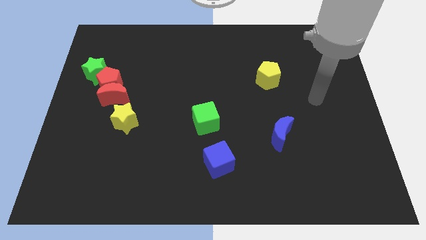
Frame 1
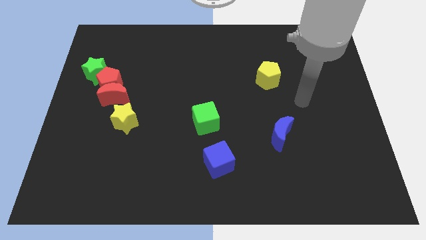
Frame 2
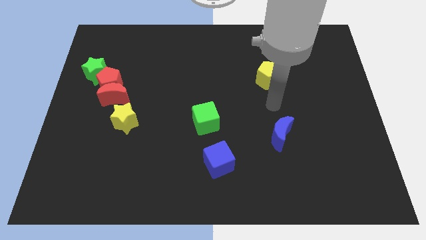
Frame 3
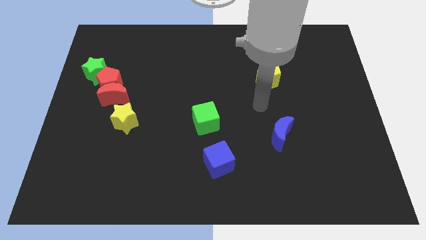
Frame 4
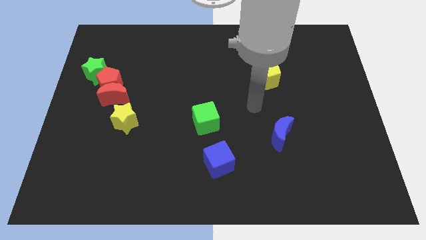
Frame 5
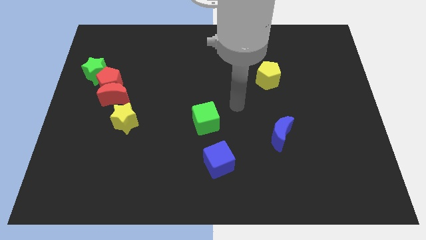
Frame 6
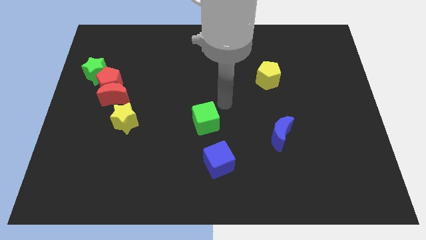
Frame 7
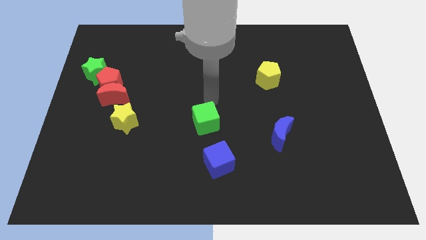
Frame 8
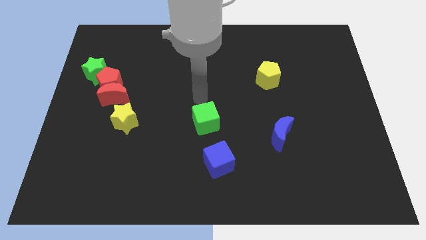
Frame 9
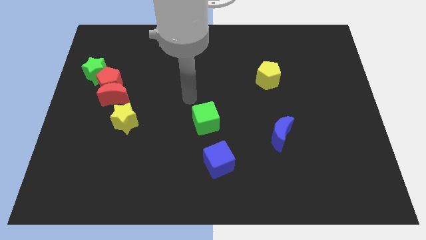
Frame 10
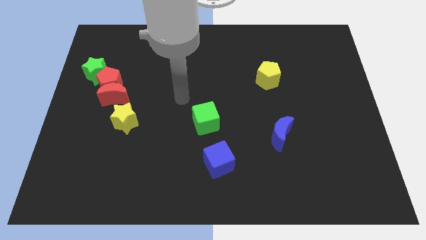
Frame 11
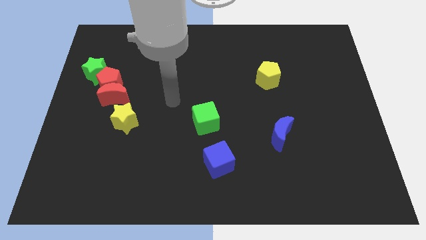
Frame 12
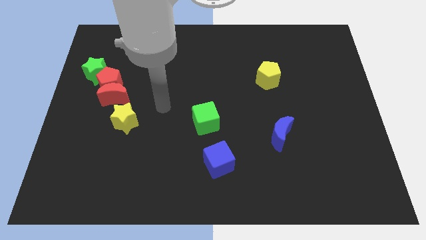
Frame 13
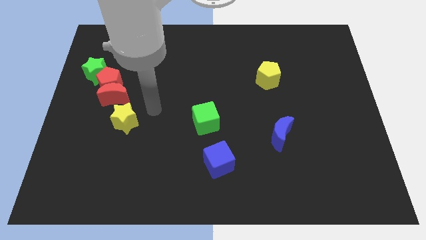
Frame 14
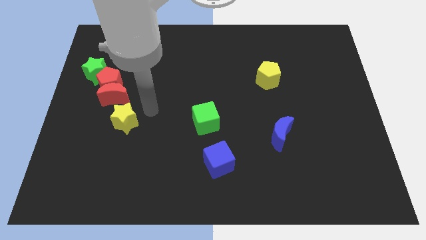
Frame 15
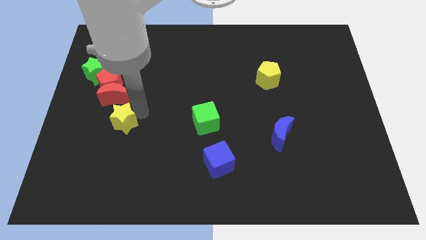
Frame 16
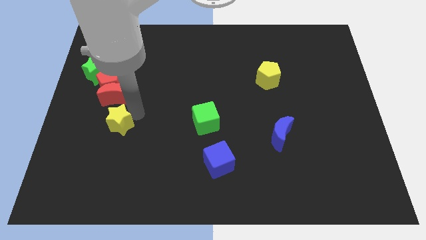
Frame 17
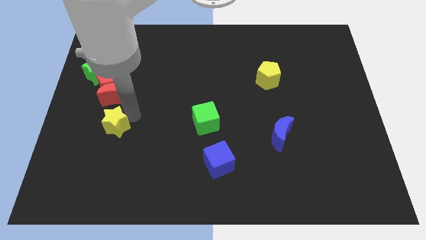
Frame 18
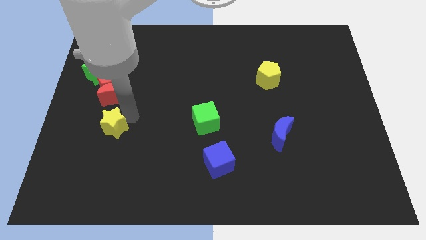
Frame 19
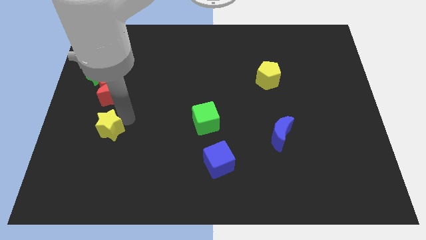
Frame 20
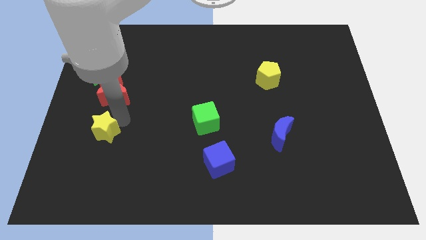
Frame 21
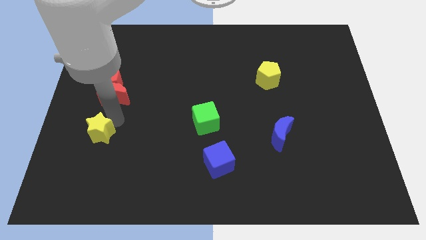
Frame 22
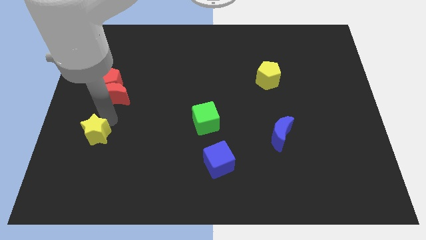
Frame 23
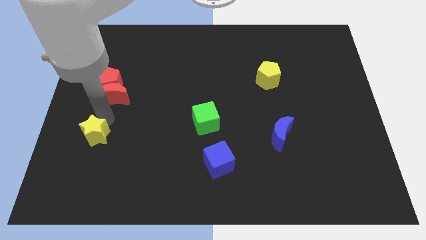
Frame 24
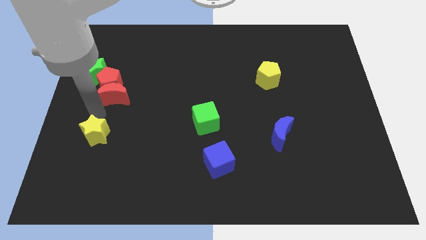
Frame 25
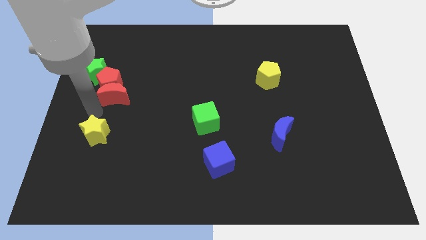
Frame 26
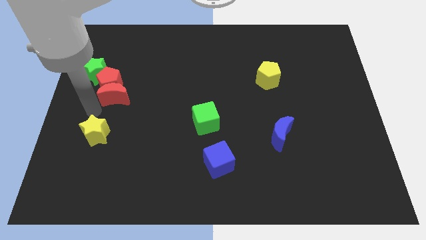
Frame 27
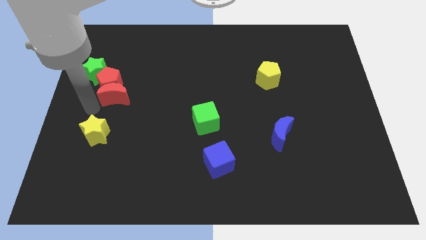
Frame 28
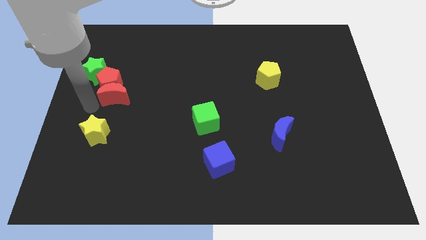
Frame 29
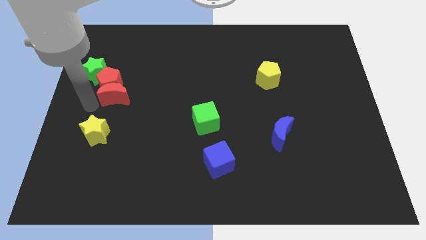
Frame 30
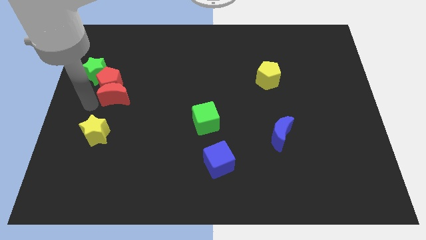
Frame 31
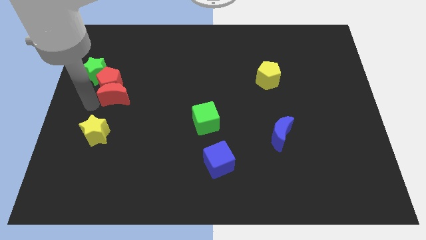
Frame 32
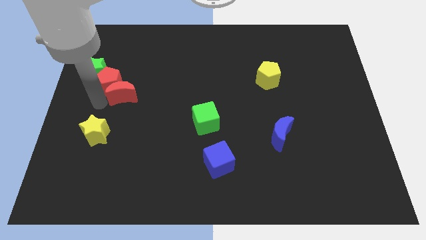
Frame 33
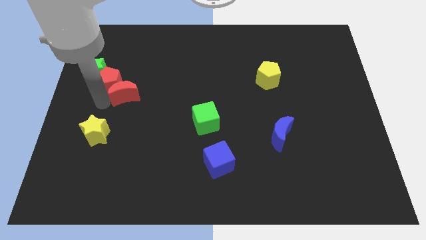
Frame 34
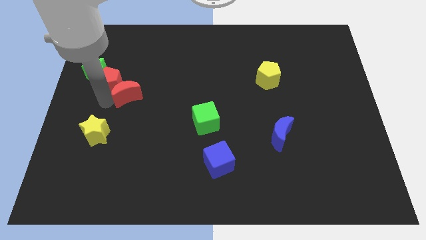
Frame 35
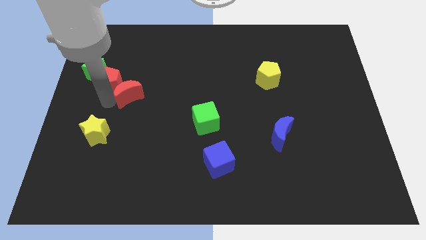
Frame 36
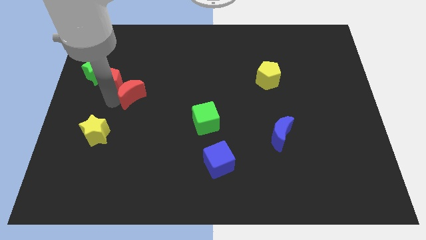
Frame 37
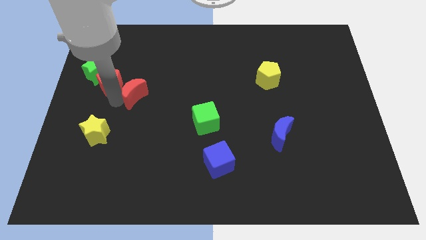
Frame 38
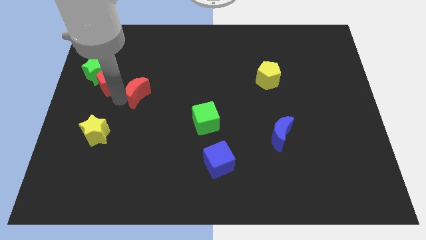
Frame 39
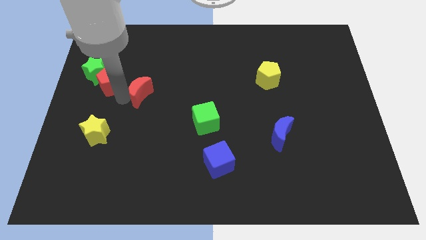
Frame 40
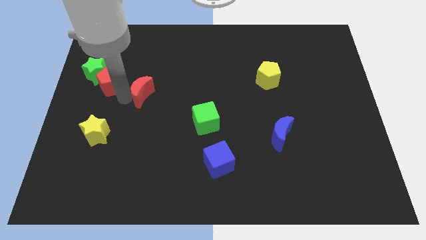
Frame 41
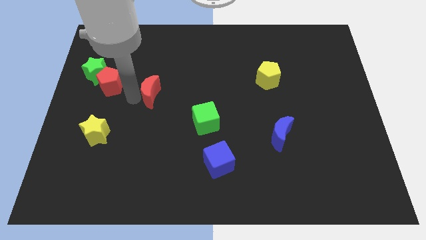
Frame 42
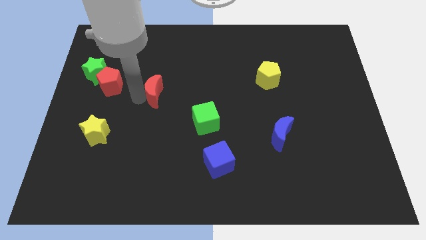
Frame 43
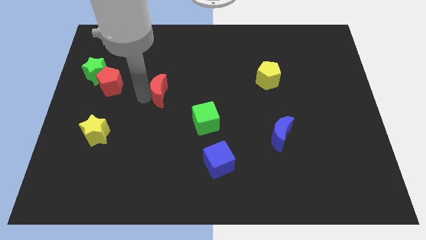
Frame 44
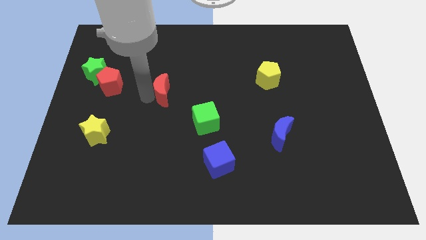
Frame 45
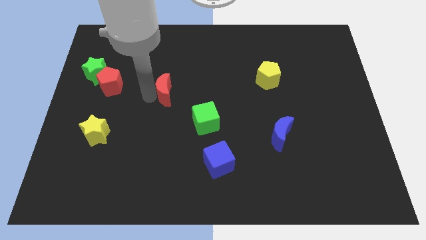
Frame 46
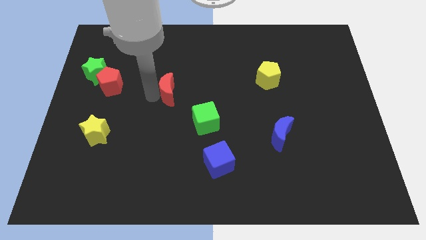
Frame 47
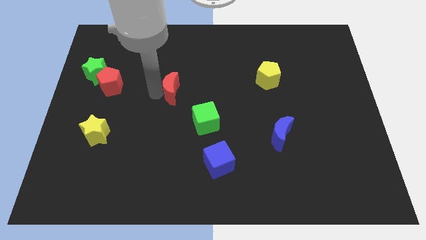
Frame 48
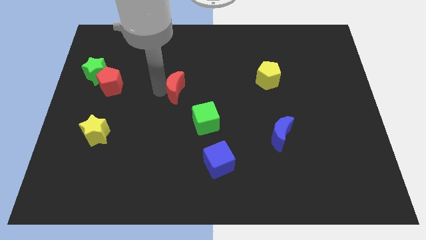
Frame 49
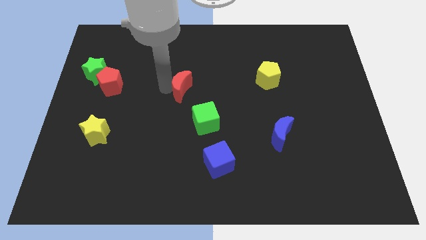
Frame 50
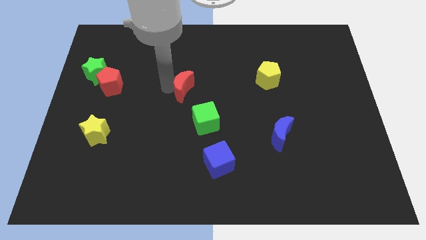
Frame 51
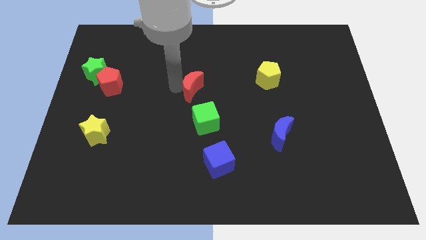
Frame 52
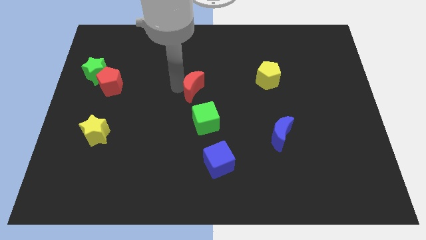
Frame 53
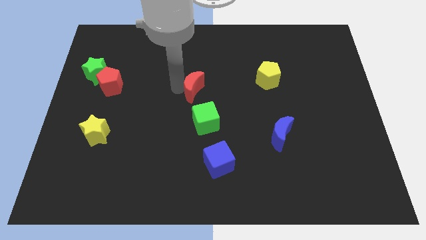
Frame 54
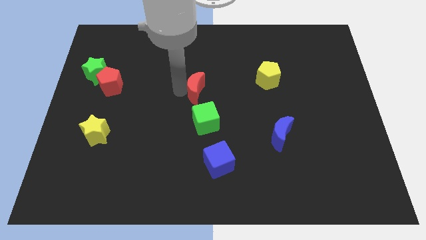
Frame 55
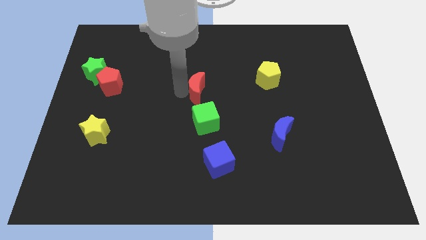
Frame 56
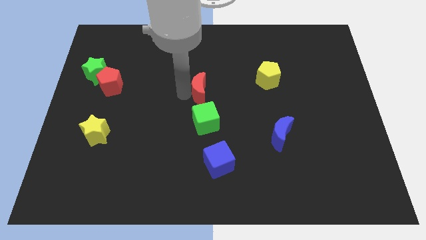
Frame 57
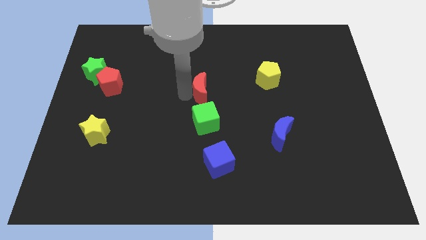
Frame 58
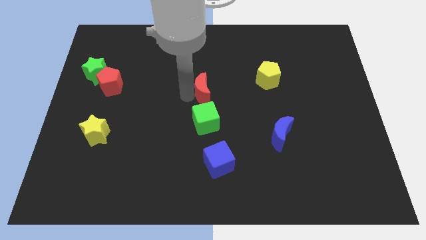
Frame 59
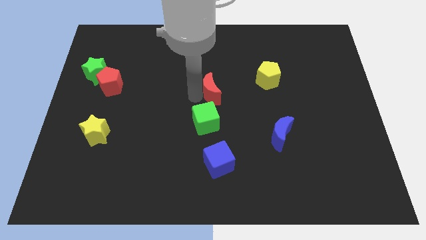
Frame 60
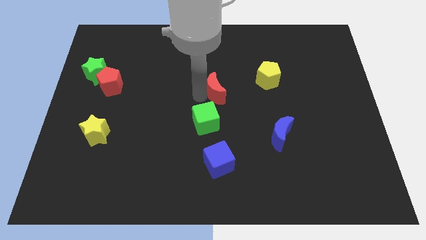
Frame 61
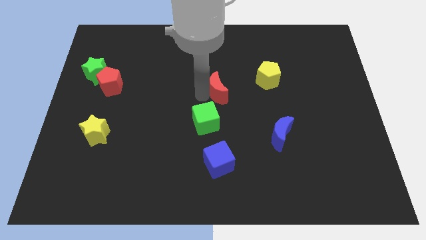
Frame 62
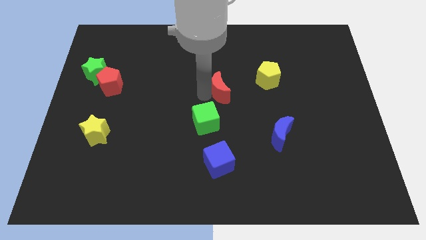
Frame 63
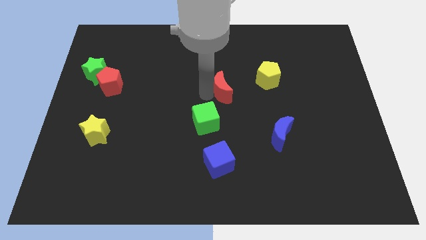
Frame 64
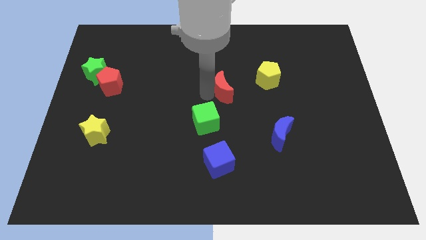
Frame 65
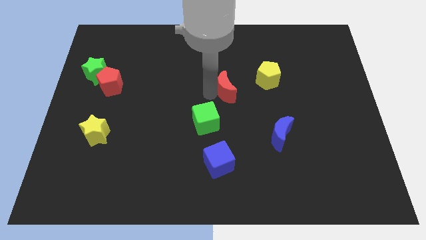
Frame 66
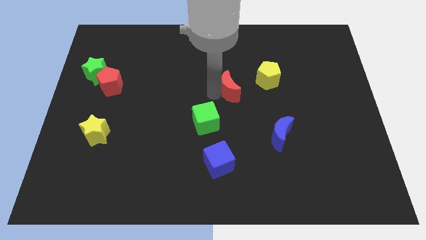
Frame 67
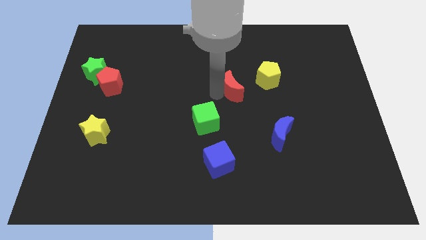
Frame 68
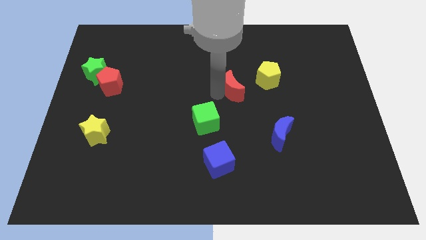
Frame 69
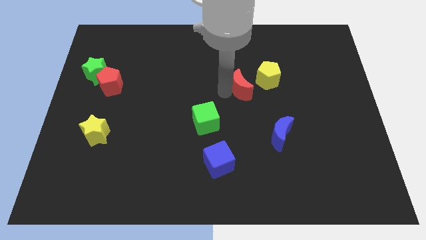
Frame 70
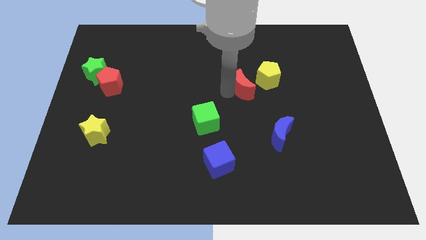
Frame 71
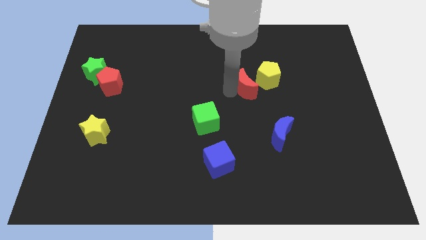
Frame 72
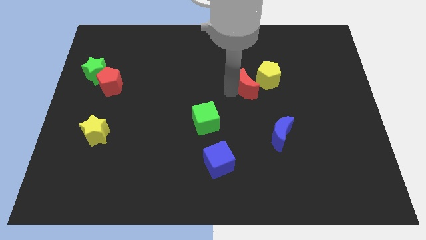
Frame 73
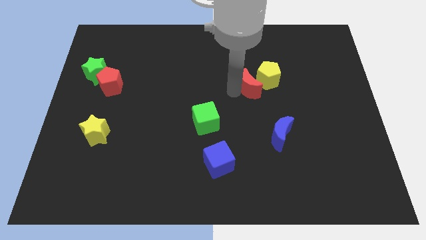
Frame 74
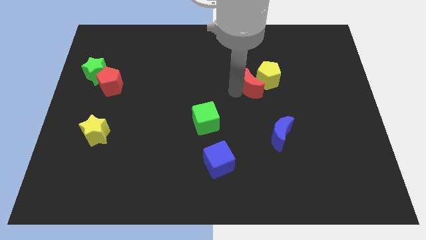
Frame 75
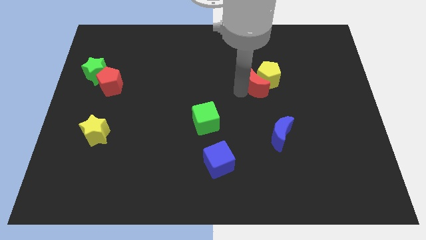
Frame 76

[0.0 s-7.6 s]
push the red moon close to the yellow pentagon

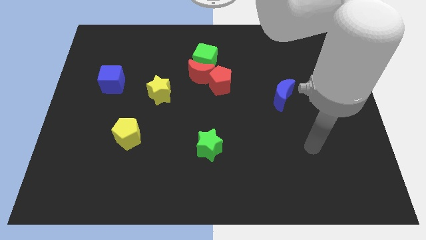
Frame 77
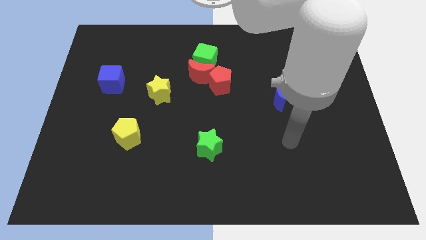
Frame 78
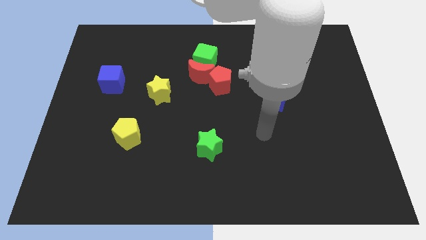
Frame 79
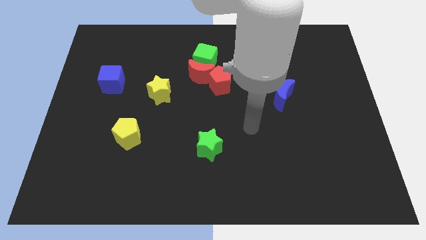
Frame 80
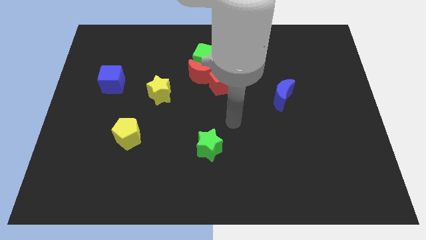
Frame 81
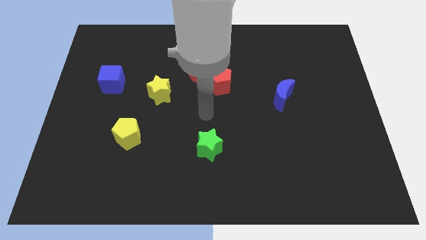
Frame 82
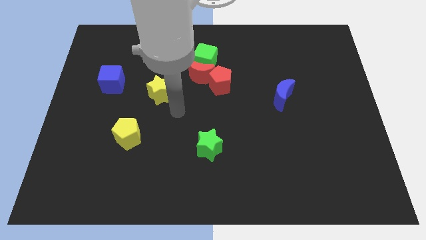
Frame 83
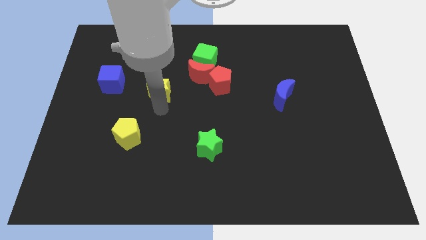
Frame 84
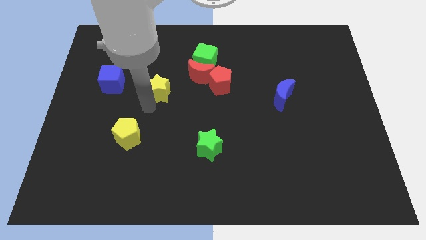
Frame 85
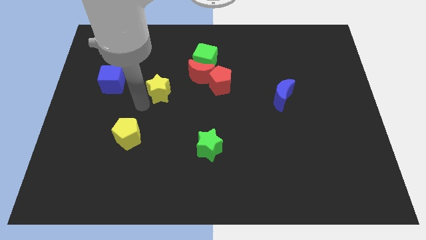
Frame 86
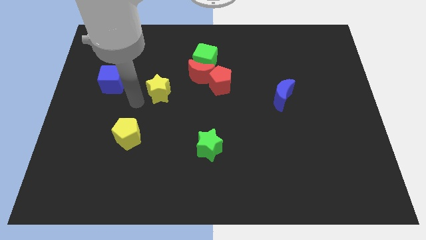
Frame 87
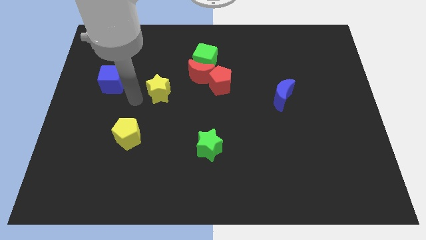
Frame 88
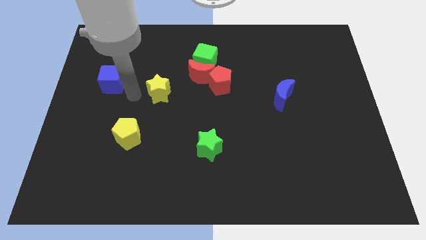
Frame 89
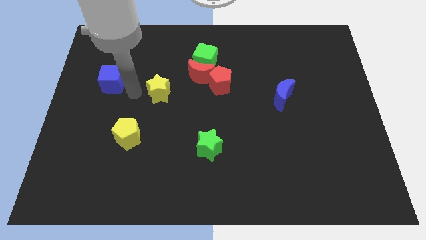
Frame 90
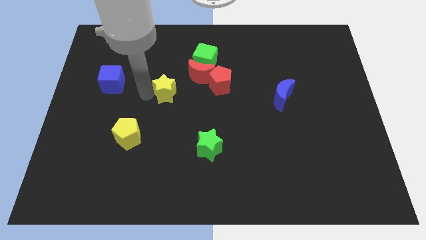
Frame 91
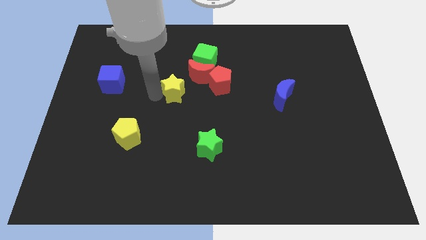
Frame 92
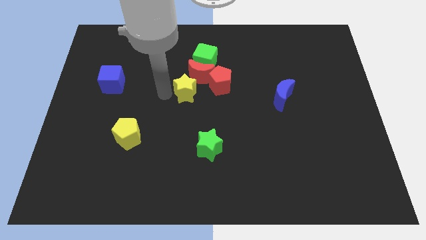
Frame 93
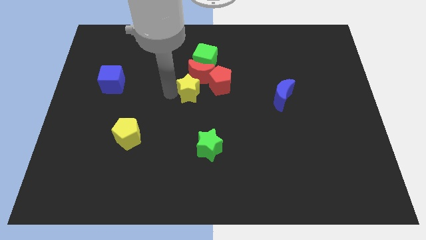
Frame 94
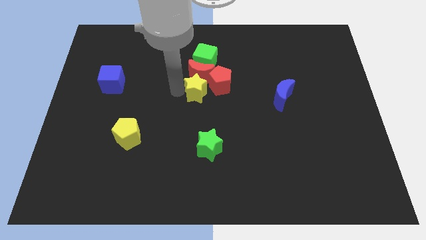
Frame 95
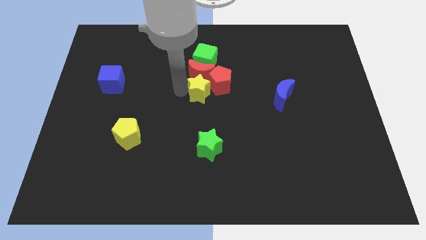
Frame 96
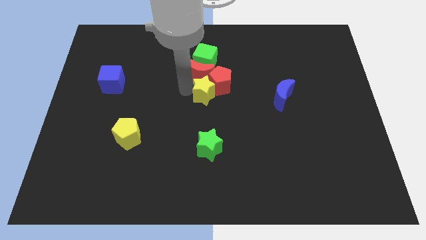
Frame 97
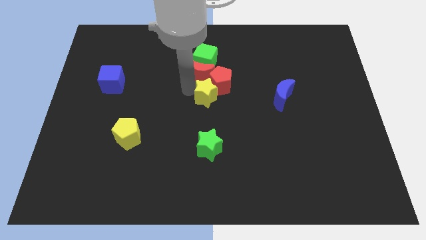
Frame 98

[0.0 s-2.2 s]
slide the yellow star towards the red pentagon
